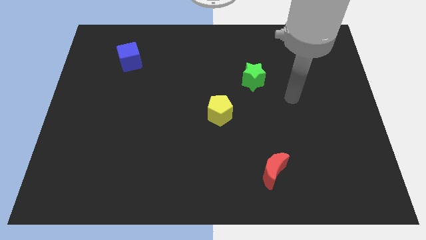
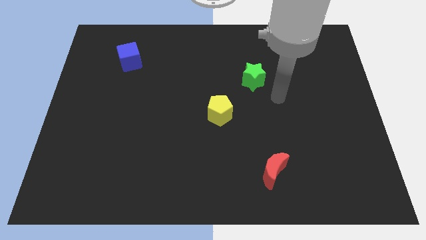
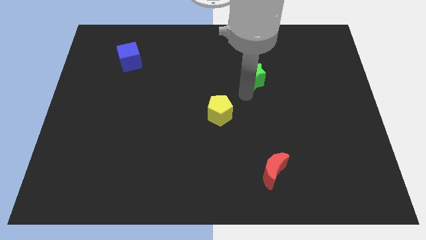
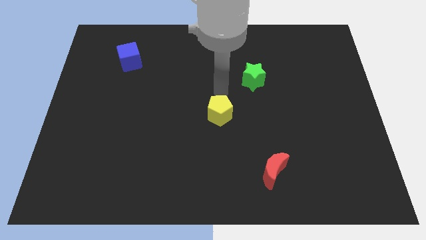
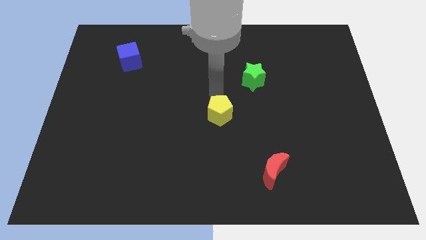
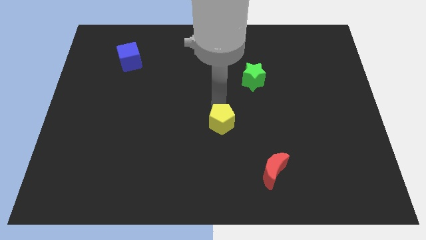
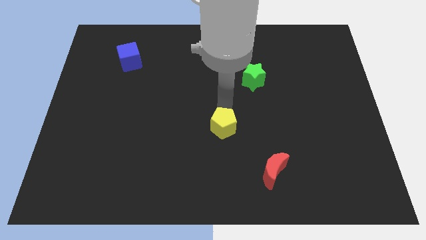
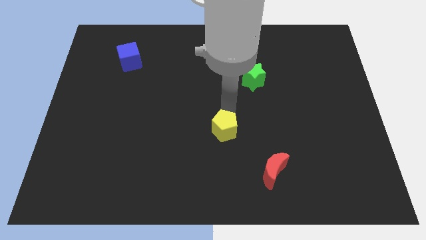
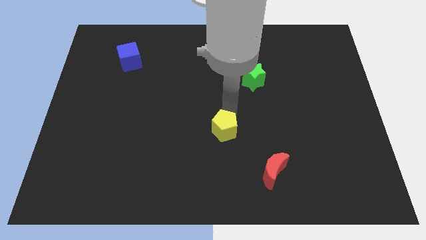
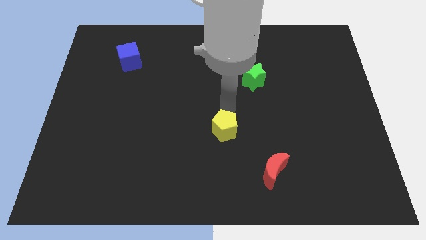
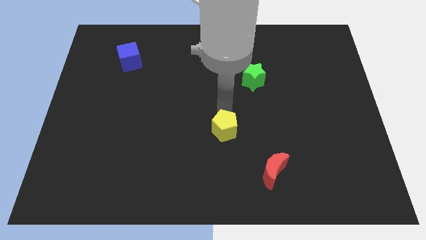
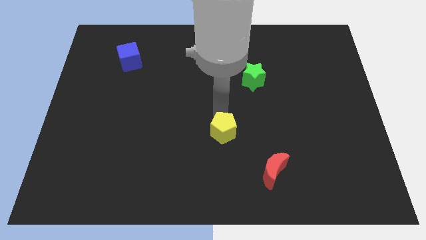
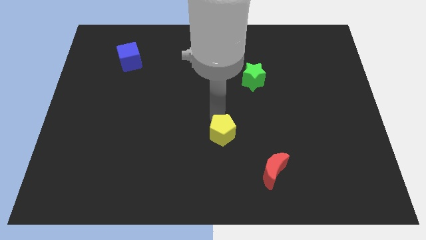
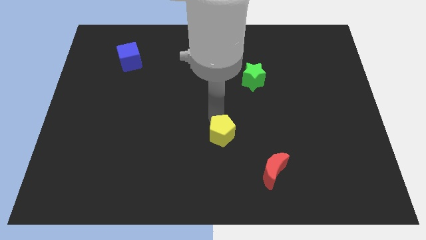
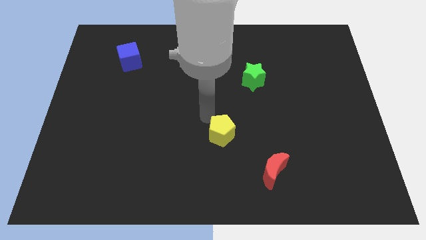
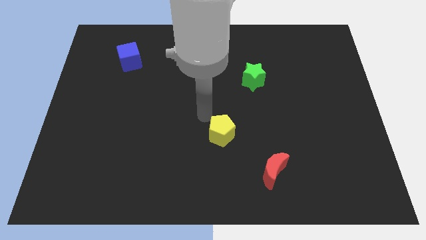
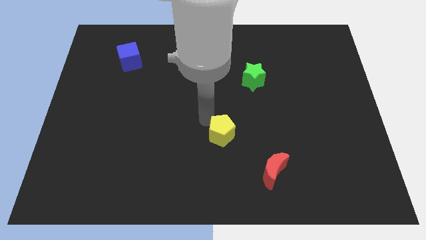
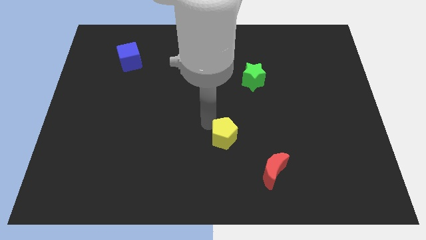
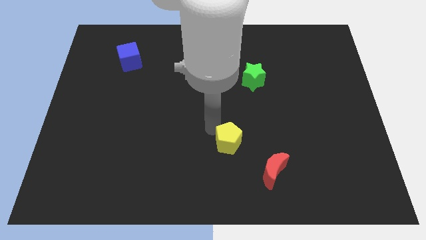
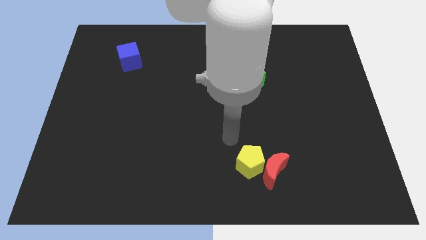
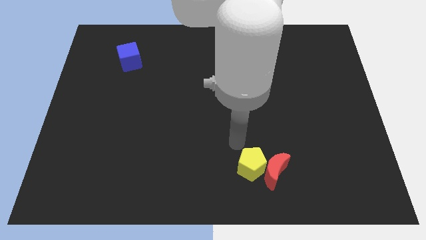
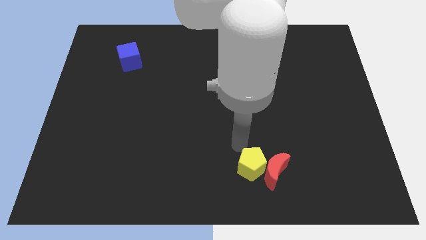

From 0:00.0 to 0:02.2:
push the yellow block close to the red block

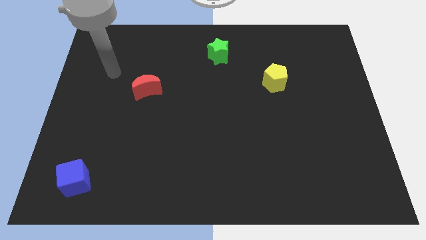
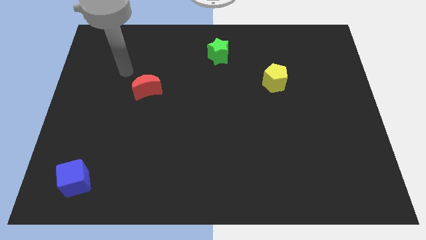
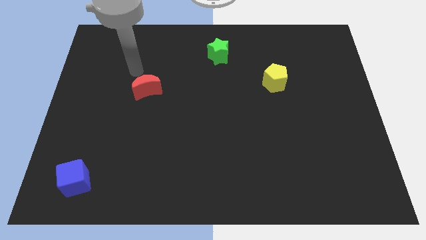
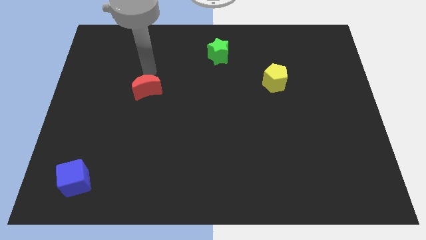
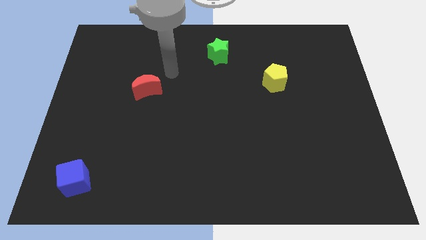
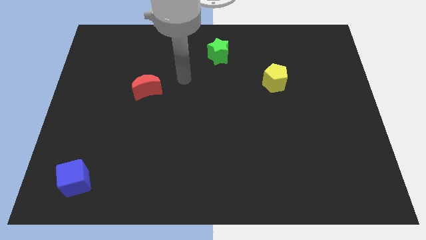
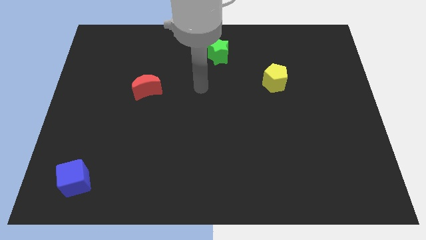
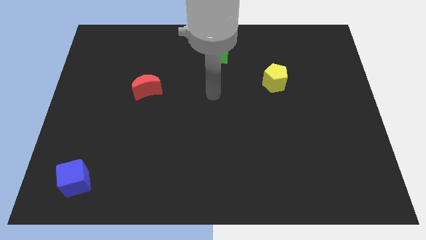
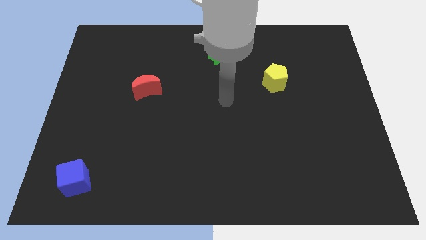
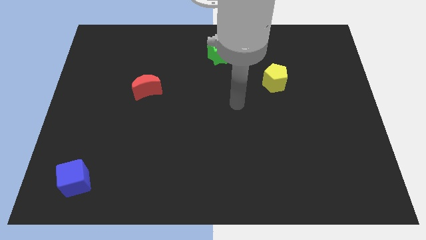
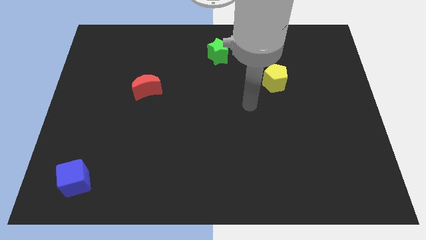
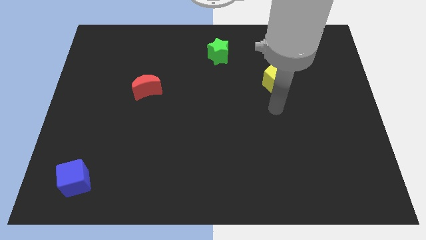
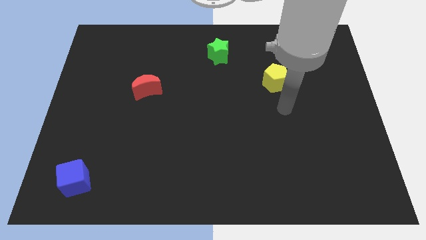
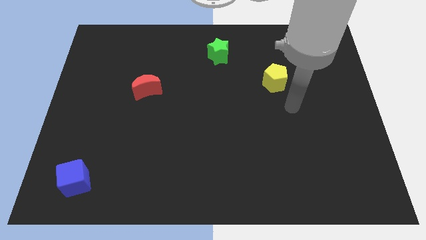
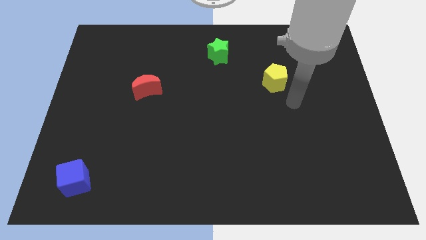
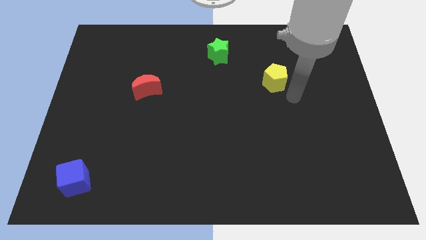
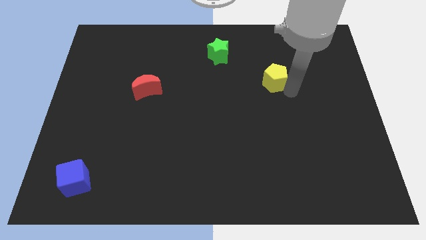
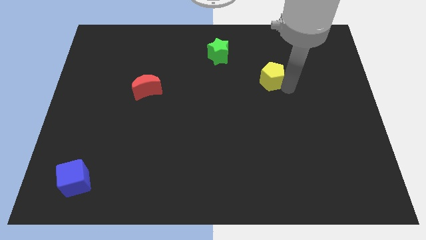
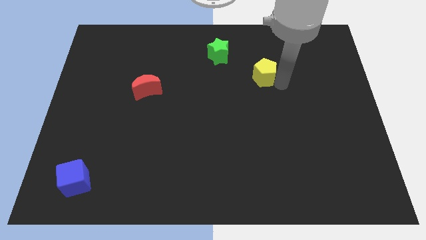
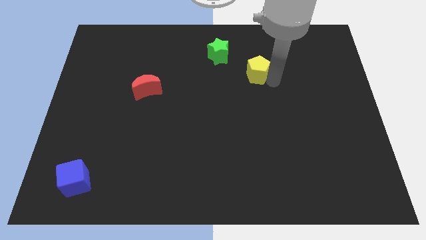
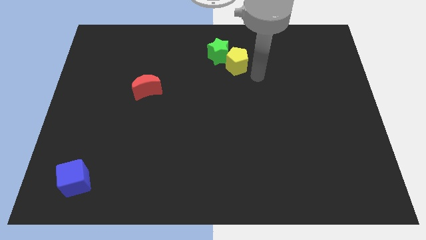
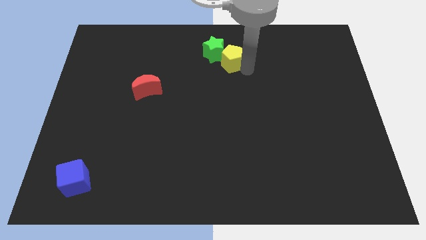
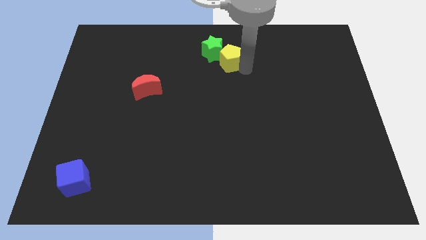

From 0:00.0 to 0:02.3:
push the yellow pentagon towards the star

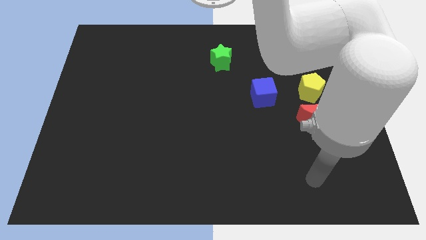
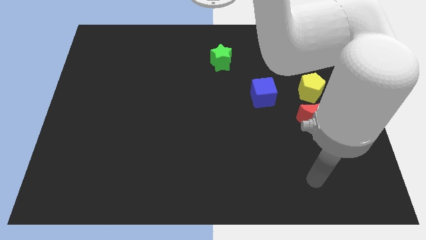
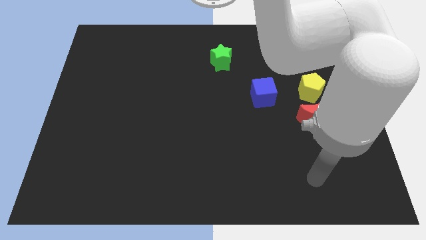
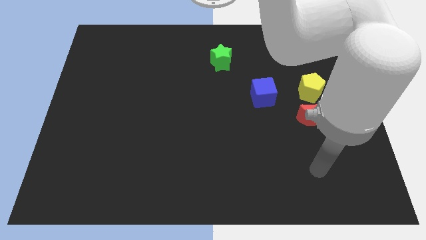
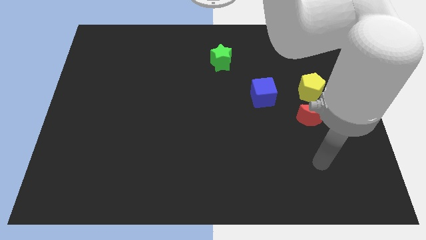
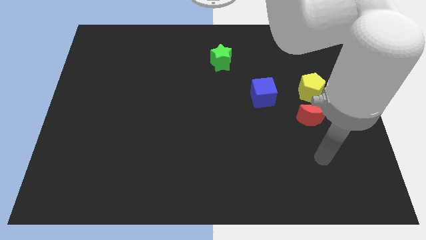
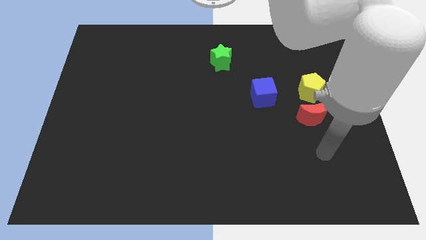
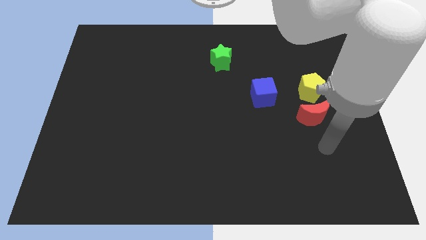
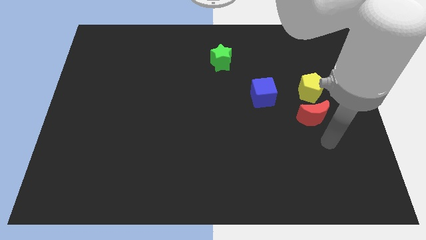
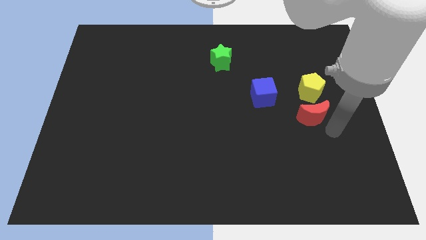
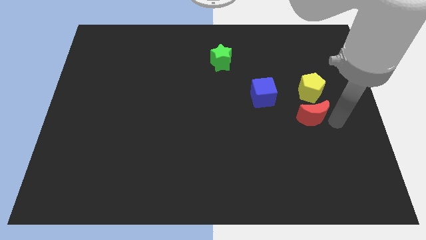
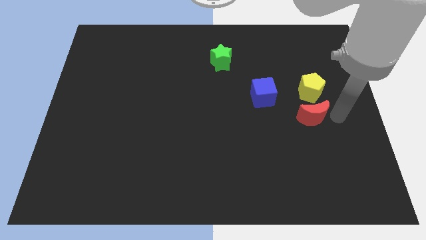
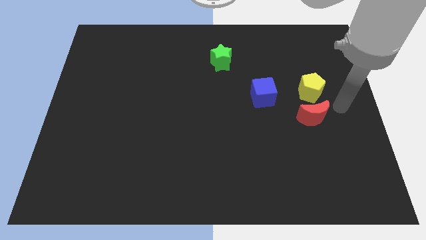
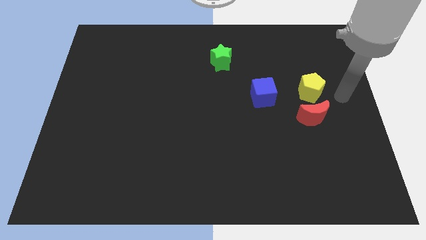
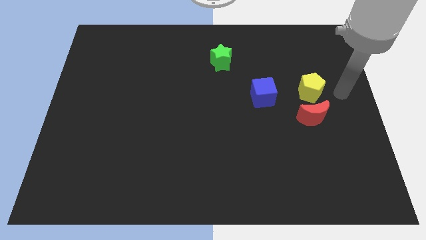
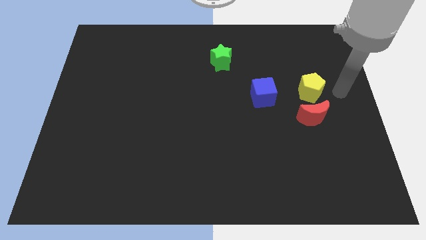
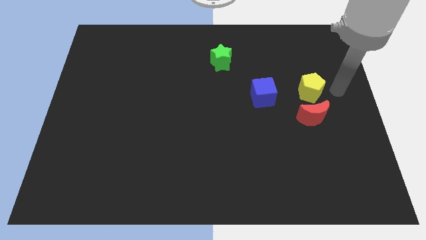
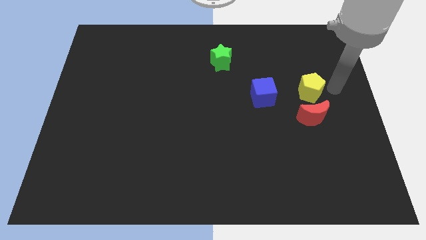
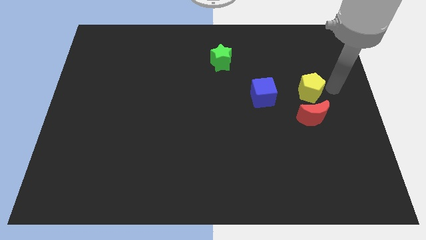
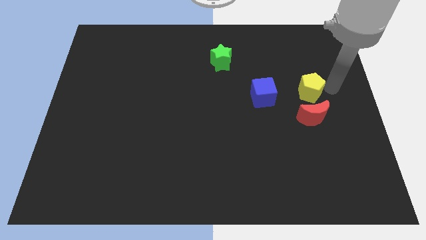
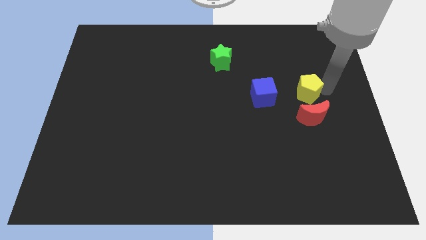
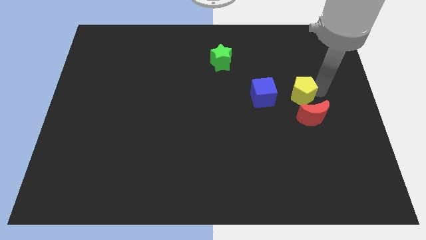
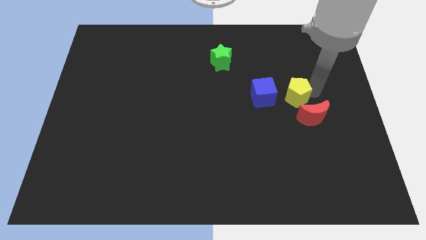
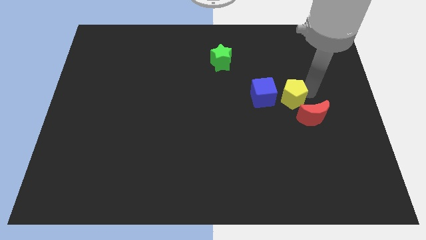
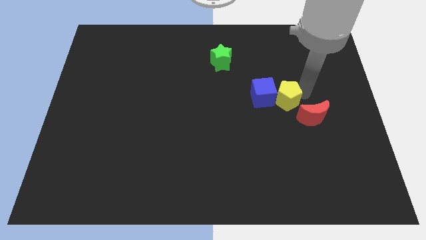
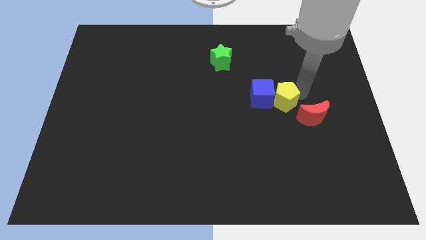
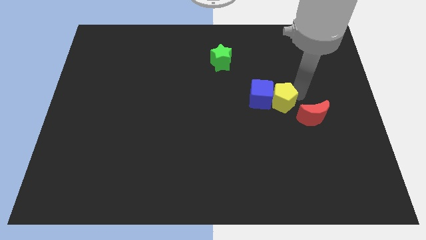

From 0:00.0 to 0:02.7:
move the yellow block close to the cube

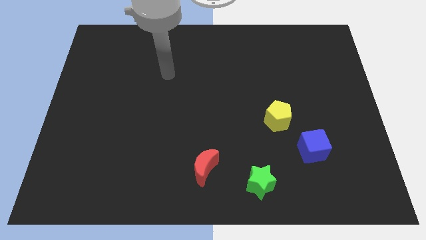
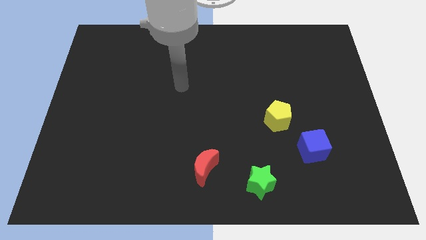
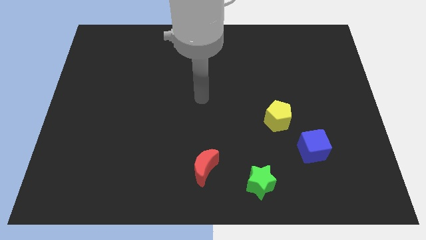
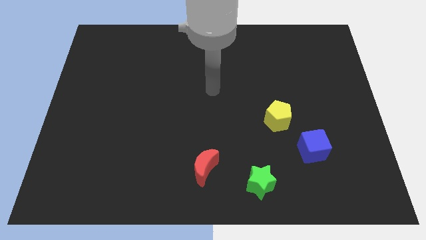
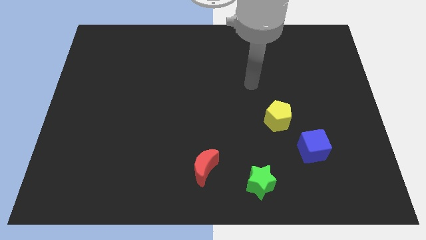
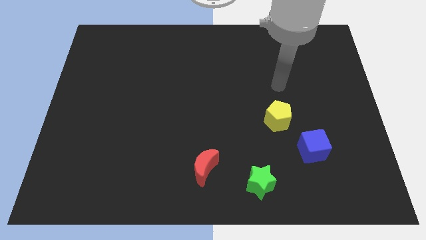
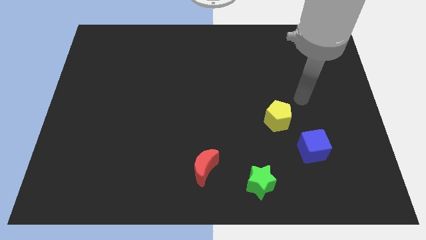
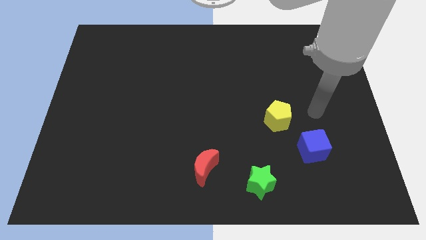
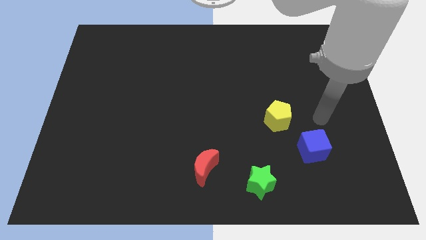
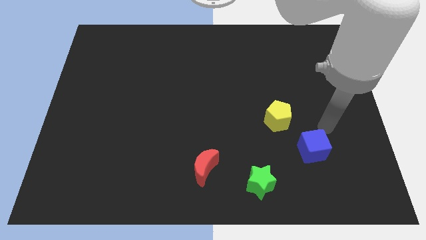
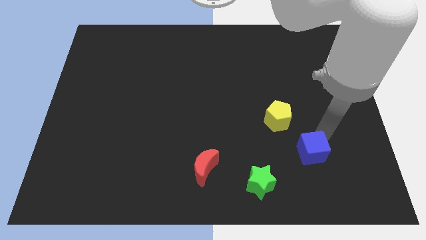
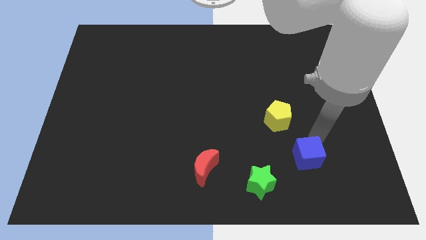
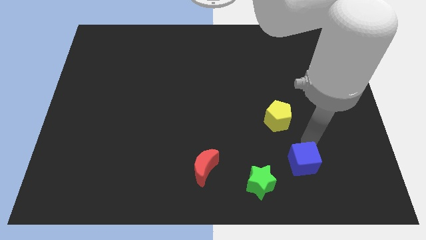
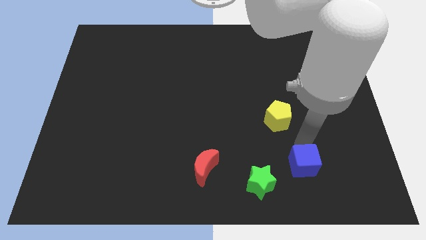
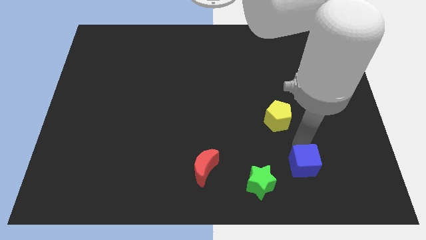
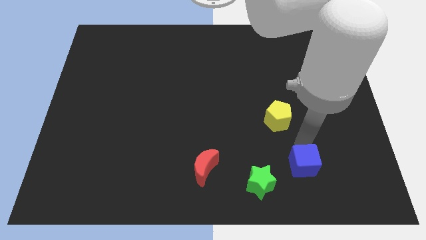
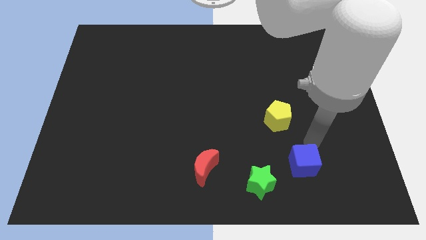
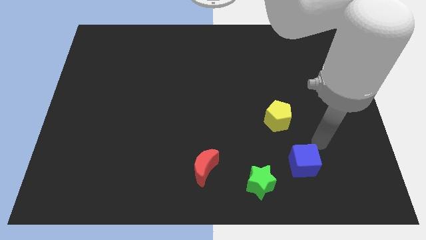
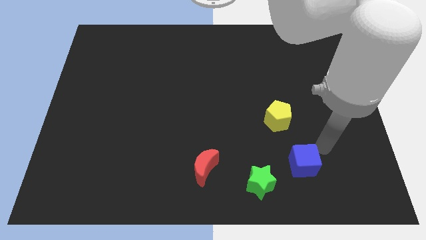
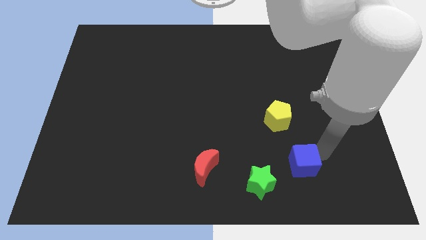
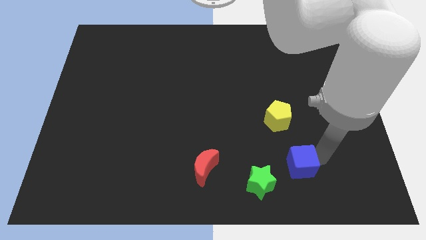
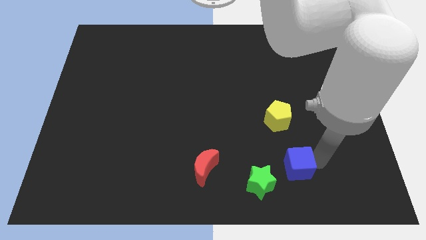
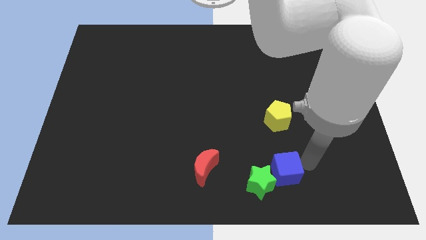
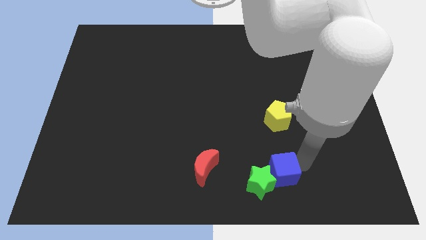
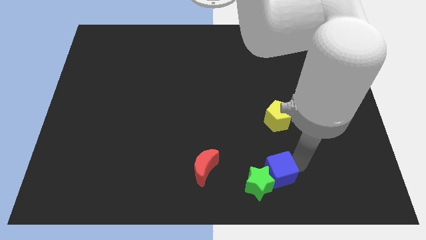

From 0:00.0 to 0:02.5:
move the blue cube towards the green block
